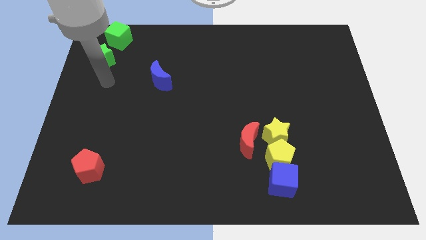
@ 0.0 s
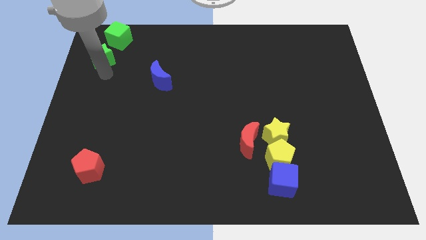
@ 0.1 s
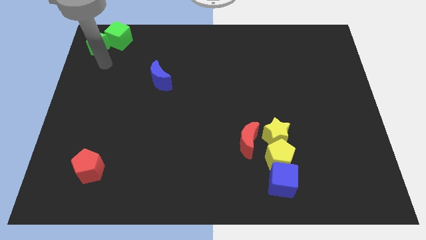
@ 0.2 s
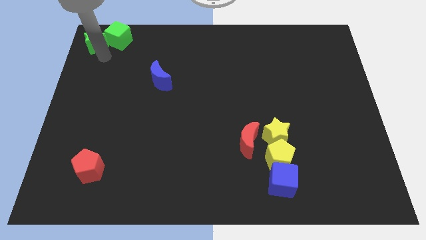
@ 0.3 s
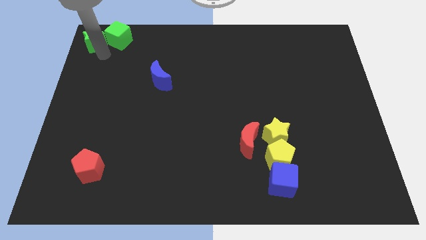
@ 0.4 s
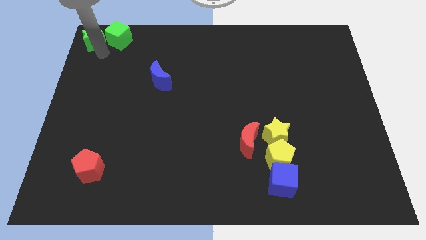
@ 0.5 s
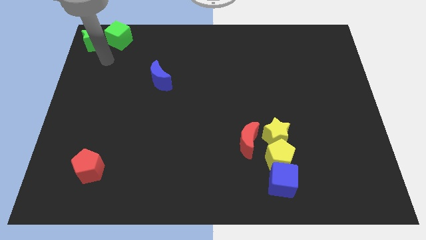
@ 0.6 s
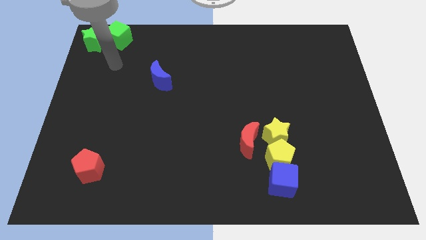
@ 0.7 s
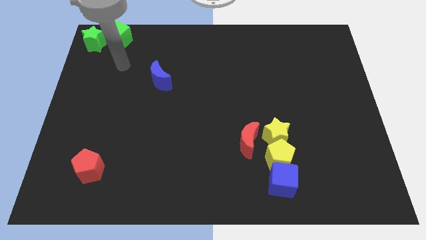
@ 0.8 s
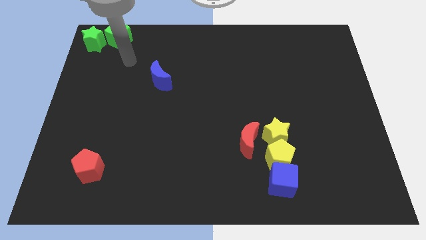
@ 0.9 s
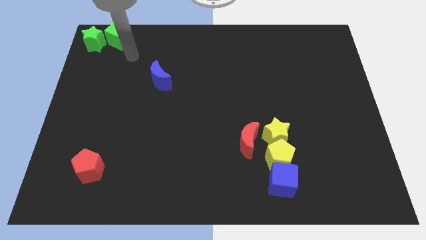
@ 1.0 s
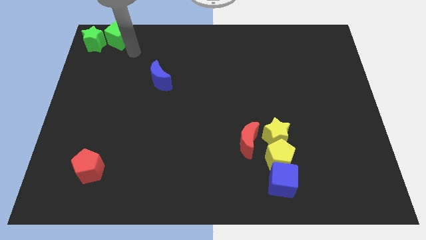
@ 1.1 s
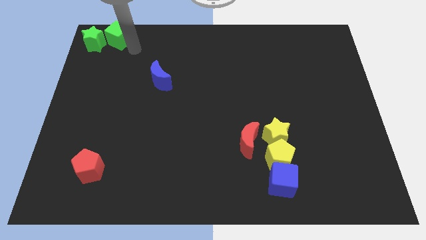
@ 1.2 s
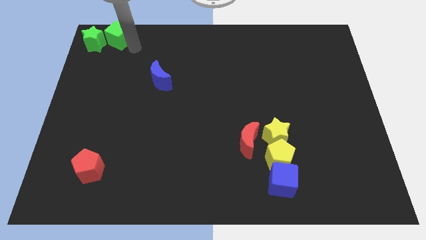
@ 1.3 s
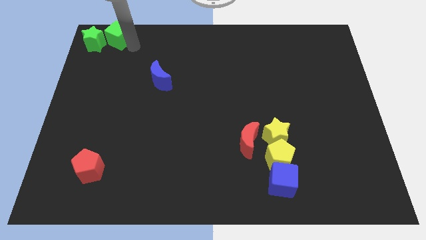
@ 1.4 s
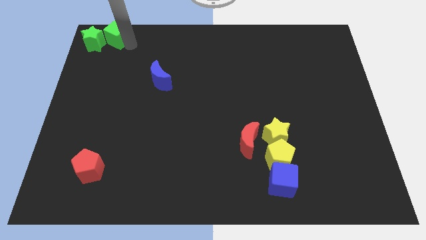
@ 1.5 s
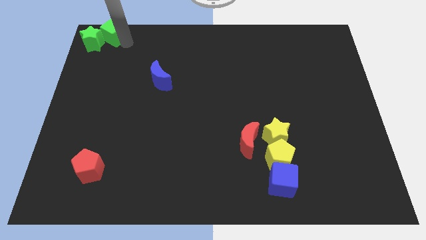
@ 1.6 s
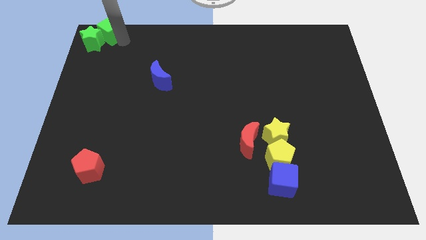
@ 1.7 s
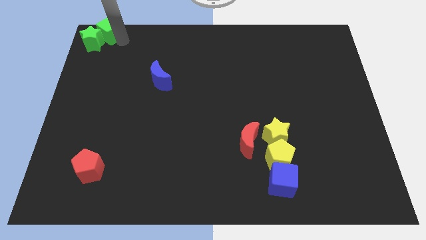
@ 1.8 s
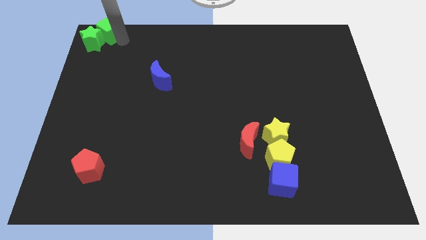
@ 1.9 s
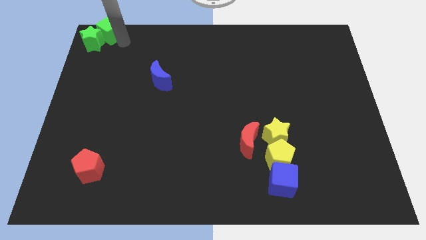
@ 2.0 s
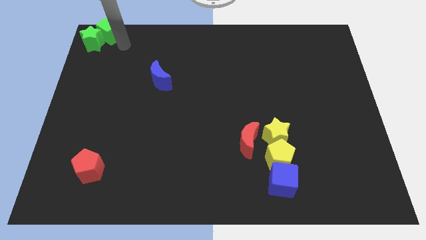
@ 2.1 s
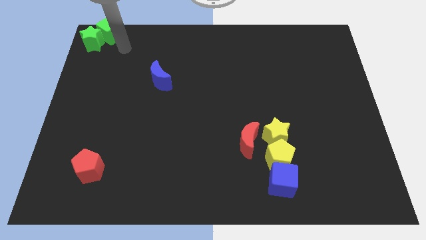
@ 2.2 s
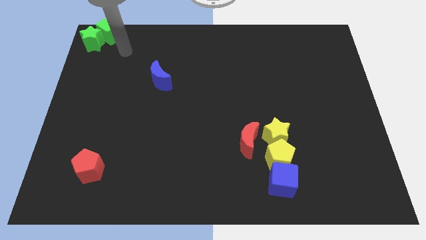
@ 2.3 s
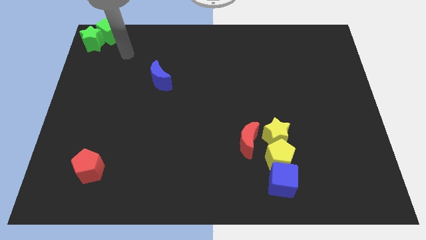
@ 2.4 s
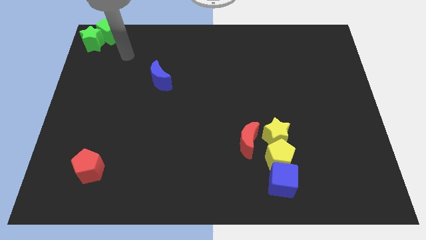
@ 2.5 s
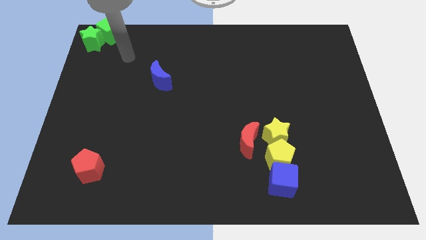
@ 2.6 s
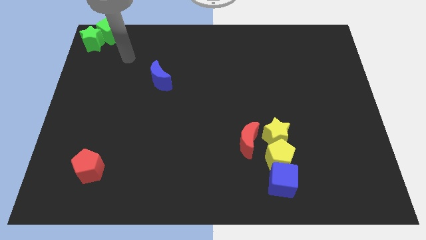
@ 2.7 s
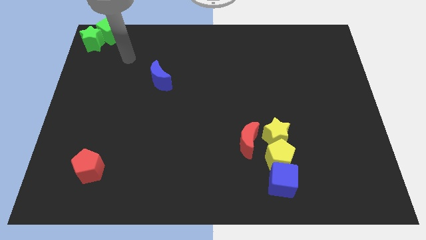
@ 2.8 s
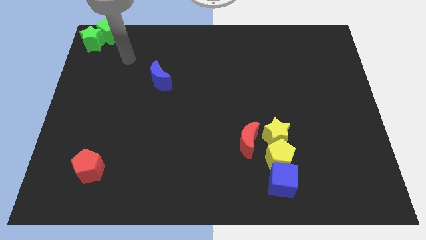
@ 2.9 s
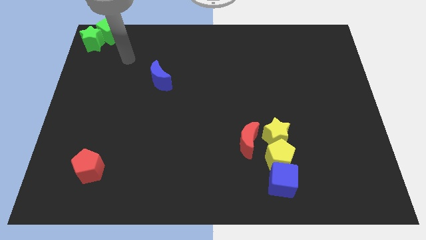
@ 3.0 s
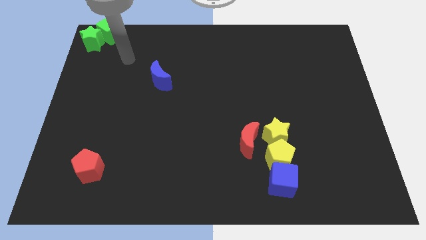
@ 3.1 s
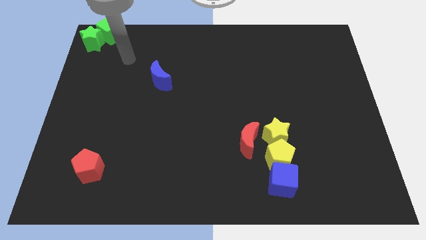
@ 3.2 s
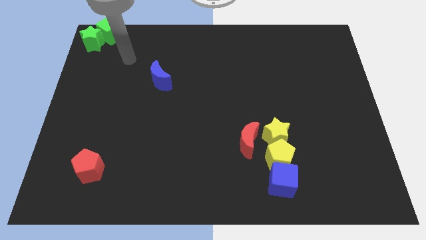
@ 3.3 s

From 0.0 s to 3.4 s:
adjust the green blocks towards the top left corner

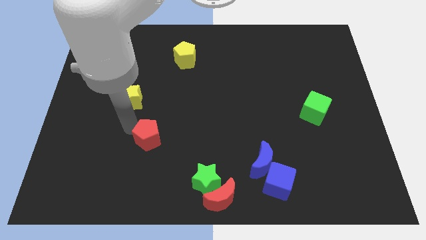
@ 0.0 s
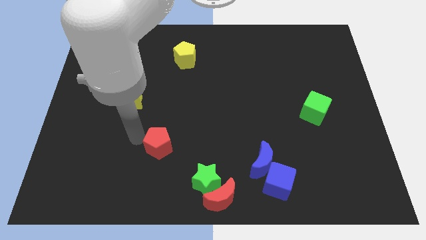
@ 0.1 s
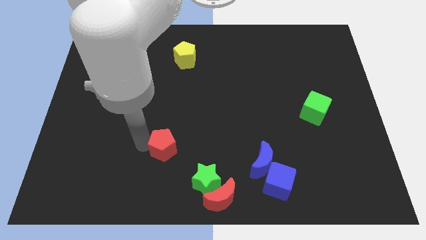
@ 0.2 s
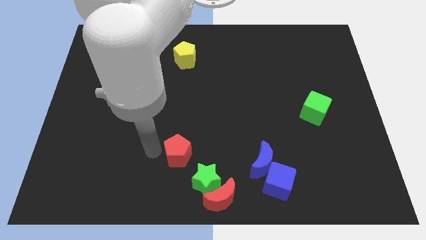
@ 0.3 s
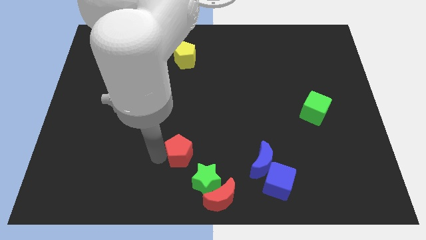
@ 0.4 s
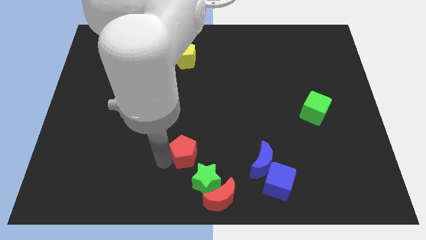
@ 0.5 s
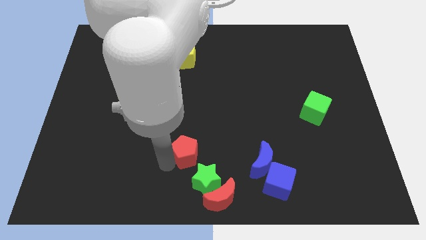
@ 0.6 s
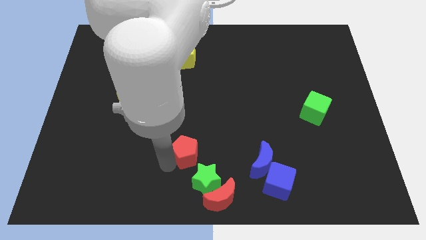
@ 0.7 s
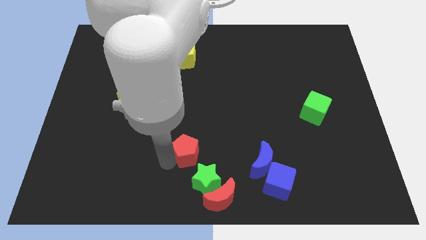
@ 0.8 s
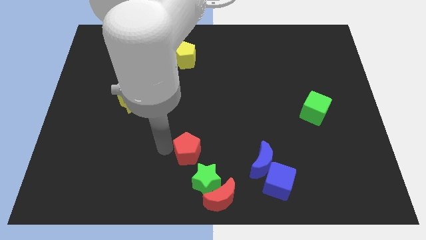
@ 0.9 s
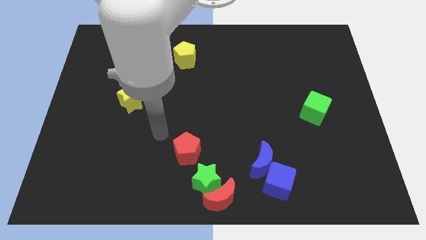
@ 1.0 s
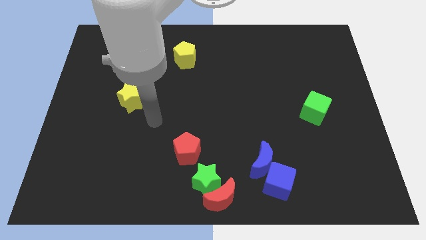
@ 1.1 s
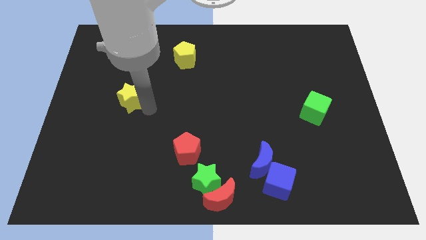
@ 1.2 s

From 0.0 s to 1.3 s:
place the red pentagon to the top side of the green star

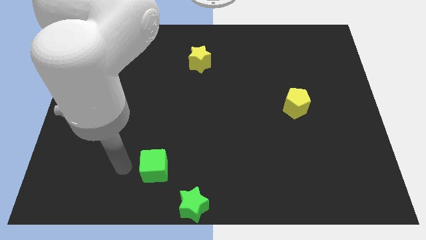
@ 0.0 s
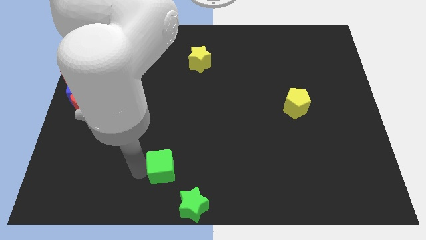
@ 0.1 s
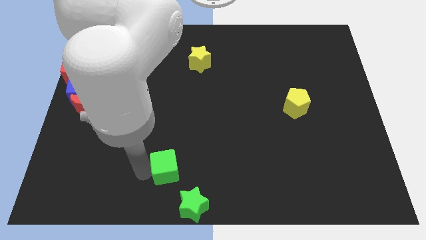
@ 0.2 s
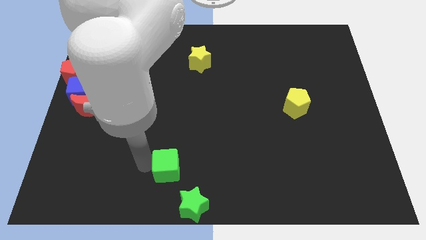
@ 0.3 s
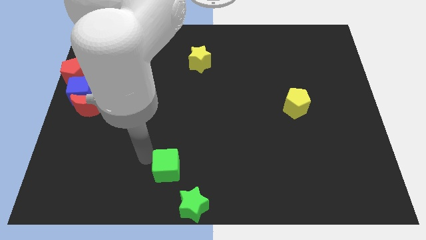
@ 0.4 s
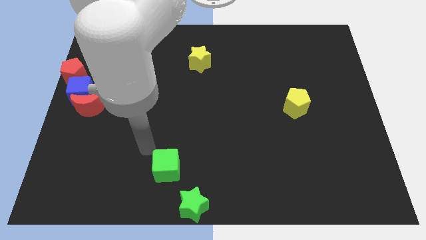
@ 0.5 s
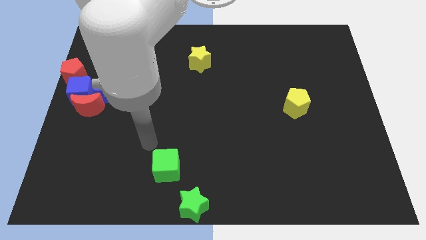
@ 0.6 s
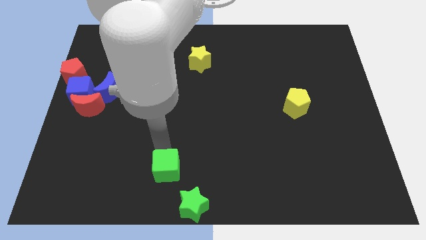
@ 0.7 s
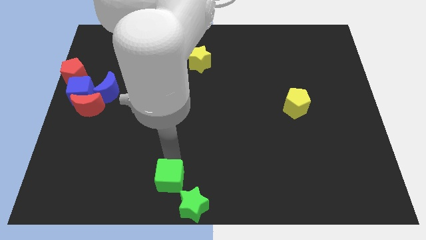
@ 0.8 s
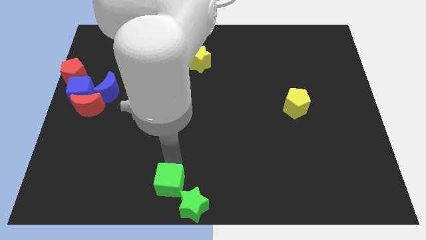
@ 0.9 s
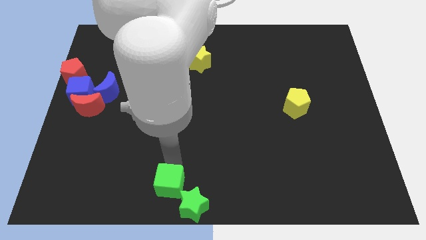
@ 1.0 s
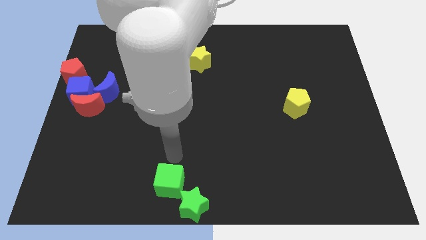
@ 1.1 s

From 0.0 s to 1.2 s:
move the green cube towards the green star

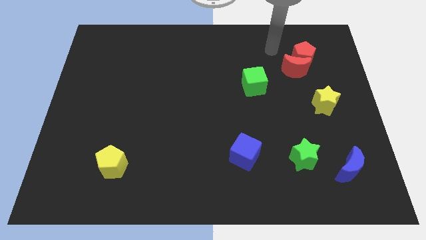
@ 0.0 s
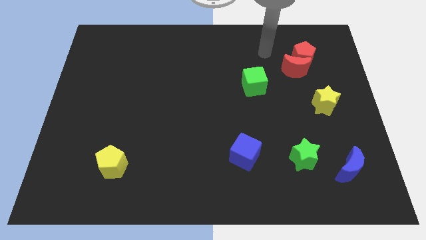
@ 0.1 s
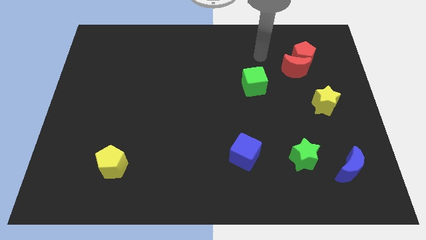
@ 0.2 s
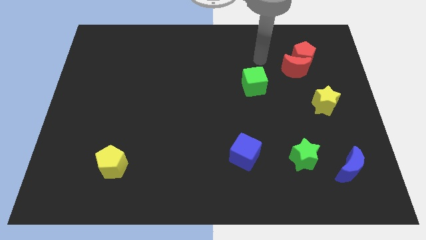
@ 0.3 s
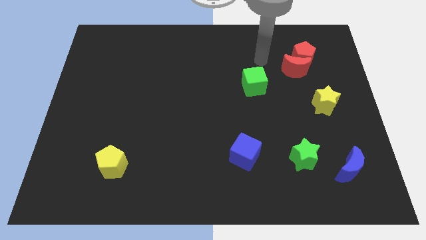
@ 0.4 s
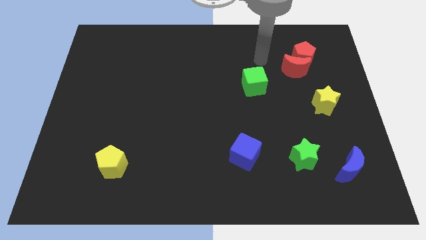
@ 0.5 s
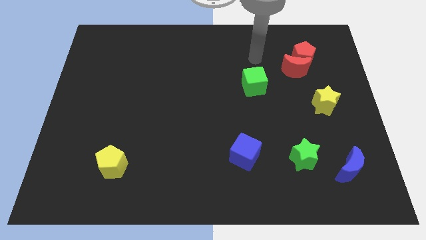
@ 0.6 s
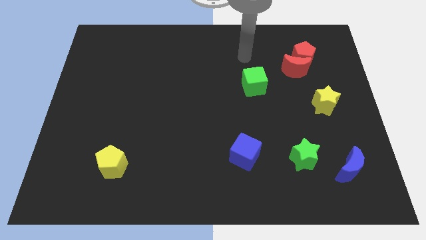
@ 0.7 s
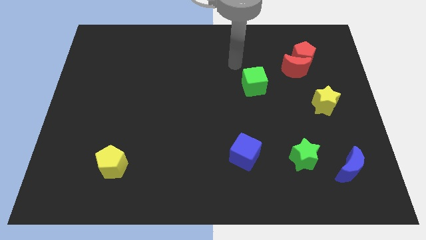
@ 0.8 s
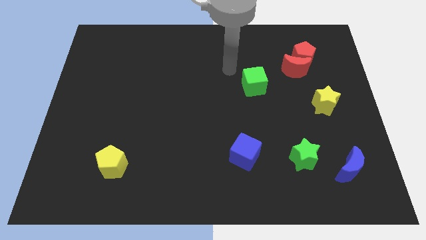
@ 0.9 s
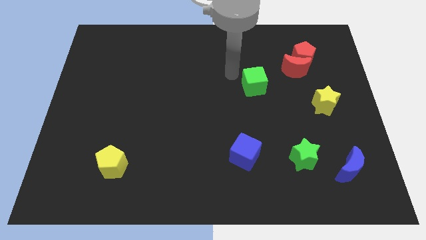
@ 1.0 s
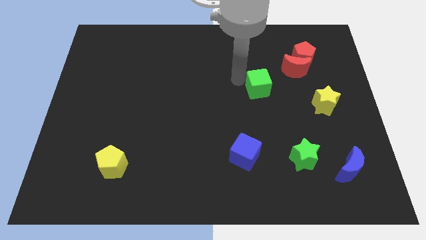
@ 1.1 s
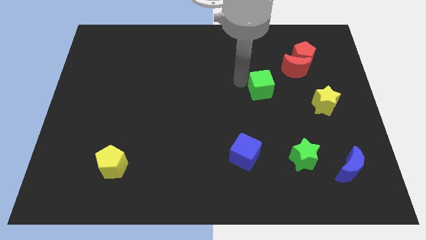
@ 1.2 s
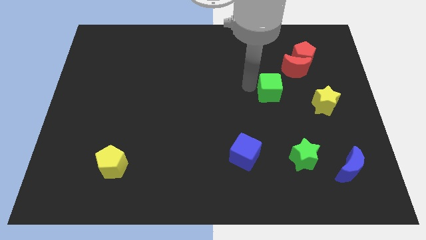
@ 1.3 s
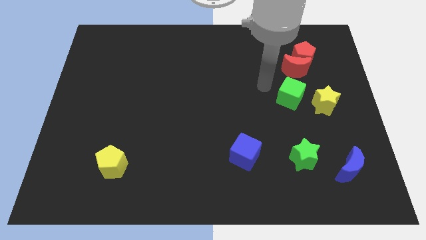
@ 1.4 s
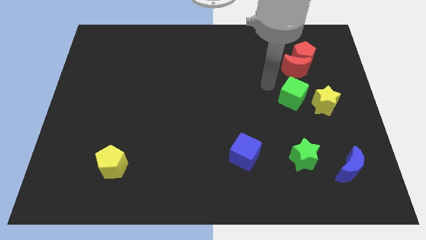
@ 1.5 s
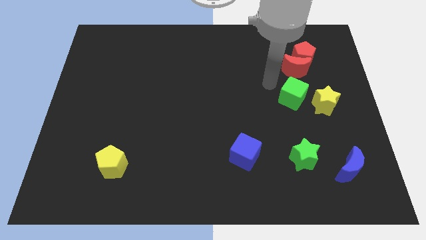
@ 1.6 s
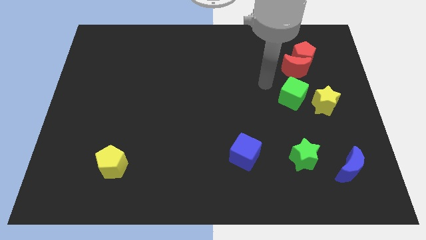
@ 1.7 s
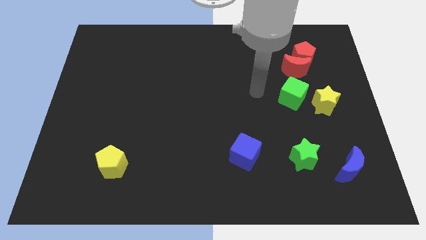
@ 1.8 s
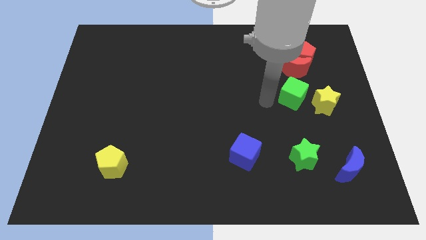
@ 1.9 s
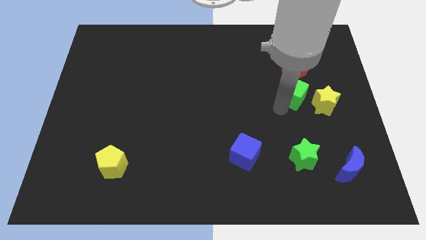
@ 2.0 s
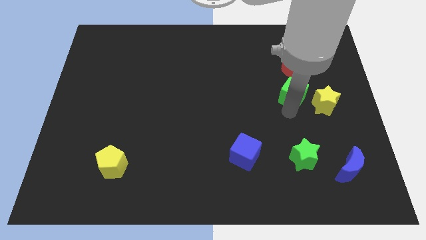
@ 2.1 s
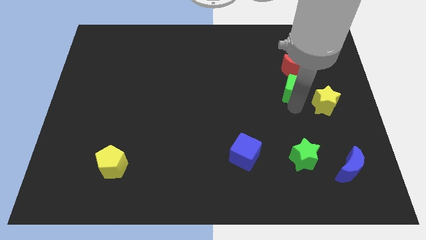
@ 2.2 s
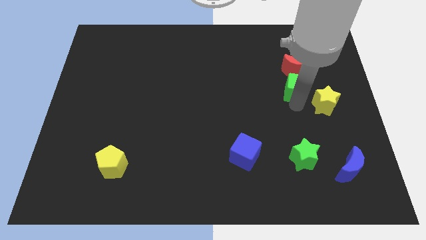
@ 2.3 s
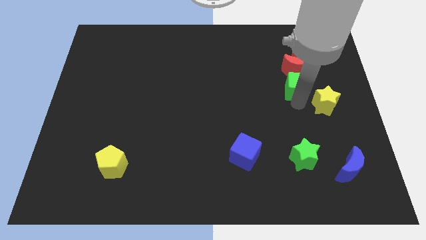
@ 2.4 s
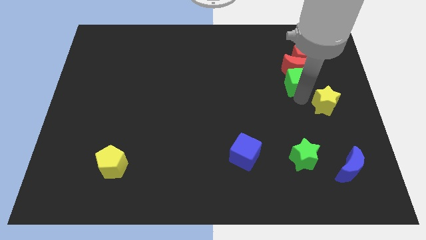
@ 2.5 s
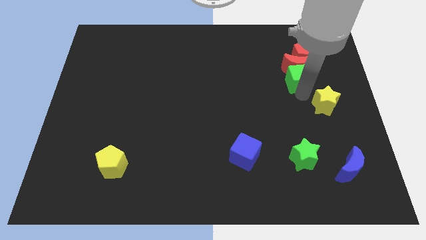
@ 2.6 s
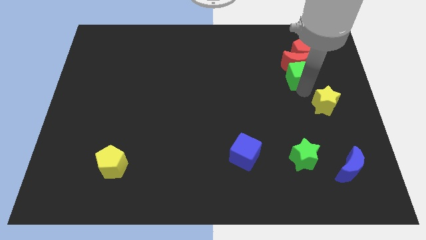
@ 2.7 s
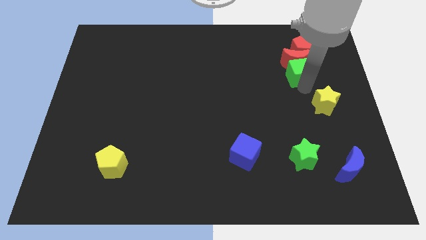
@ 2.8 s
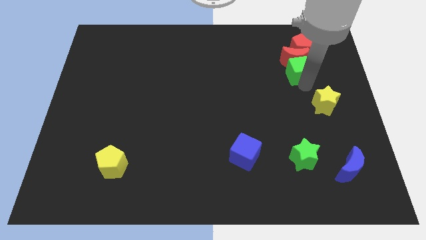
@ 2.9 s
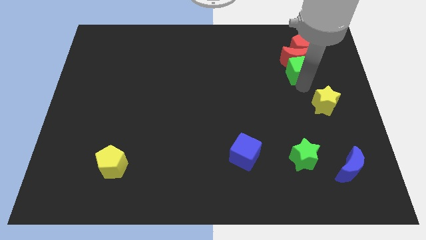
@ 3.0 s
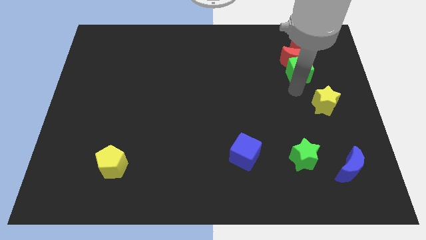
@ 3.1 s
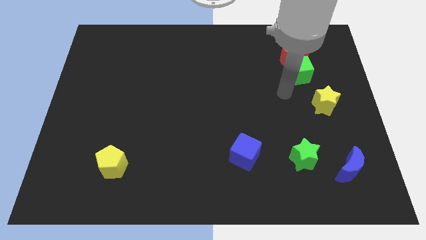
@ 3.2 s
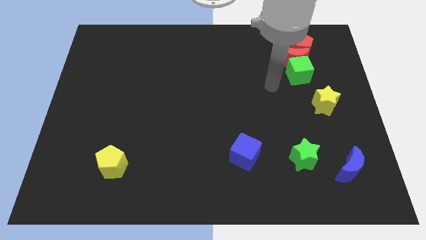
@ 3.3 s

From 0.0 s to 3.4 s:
move the green cube into red crecent
